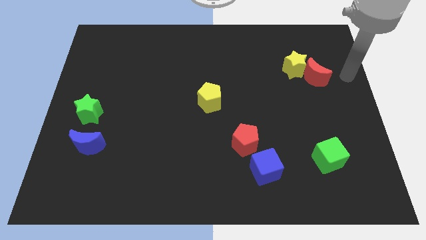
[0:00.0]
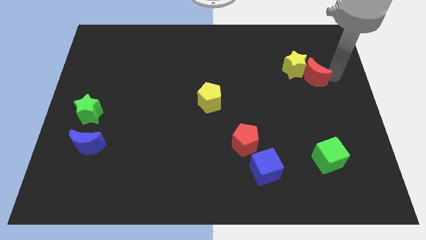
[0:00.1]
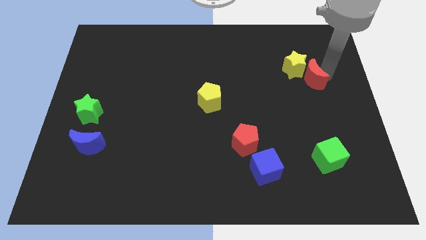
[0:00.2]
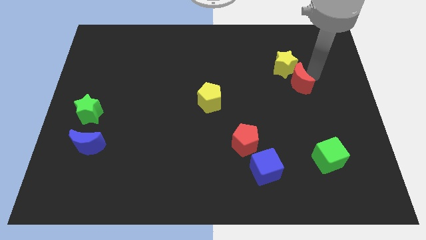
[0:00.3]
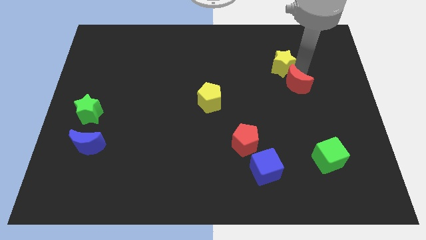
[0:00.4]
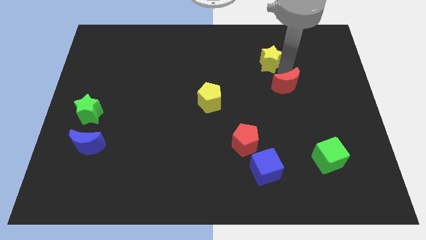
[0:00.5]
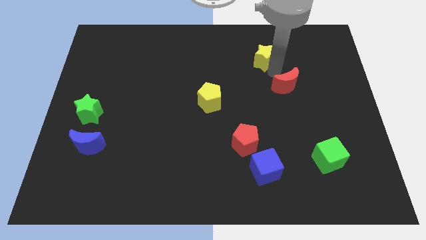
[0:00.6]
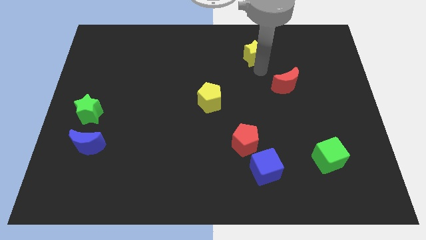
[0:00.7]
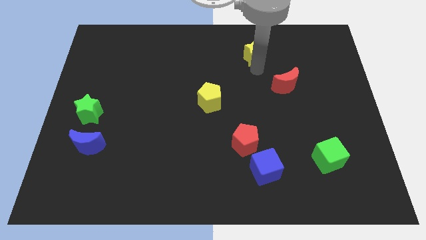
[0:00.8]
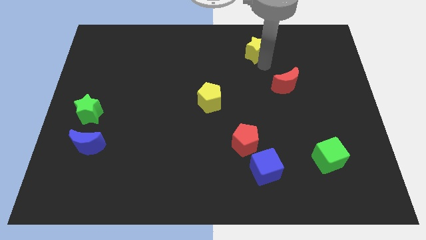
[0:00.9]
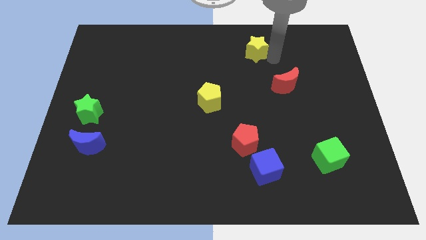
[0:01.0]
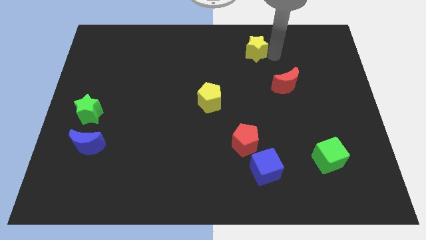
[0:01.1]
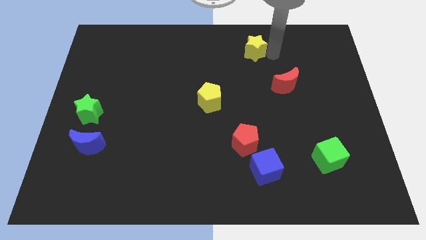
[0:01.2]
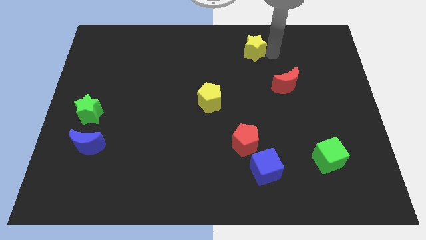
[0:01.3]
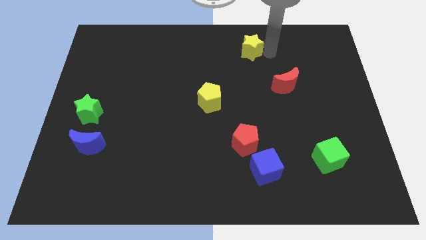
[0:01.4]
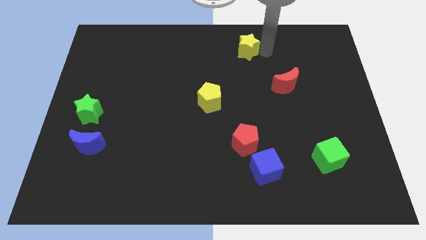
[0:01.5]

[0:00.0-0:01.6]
separate the yellow star from the red moon

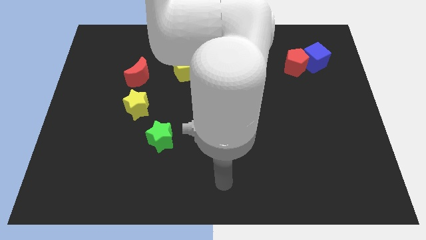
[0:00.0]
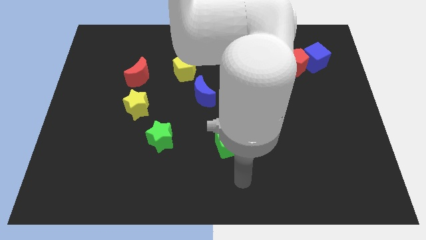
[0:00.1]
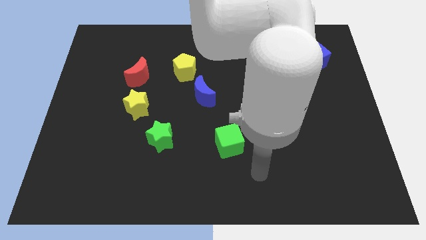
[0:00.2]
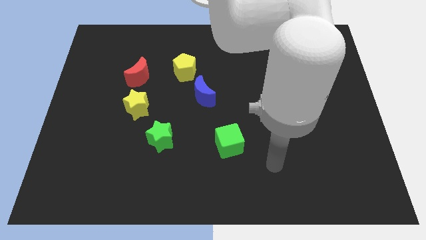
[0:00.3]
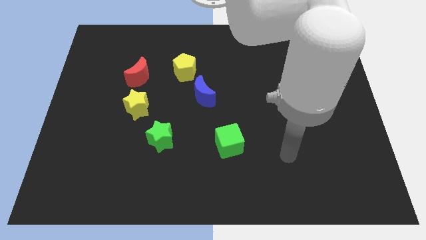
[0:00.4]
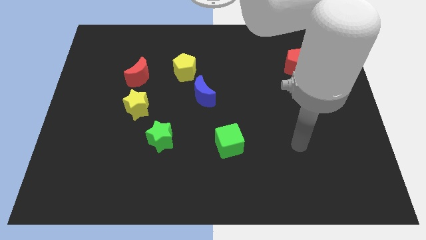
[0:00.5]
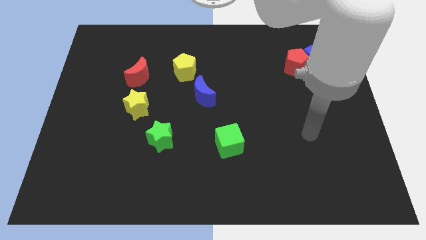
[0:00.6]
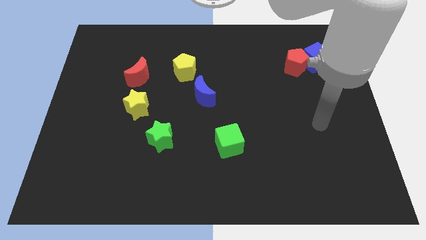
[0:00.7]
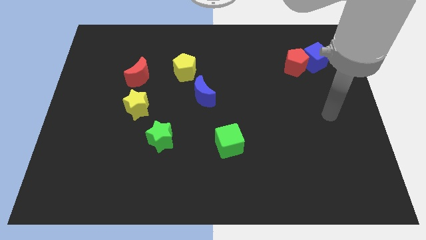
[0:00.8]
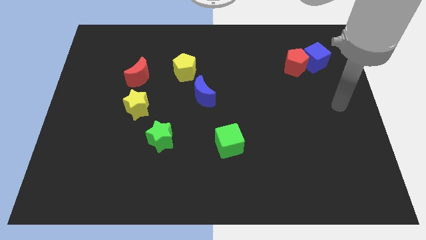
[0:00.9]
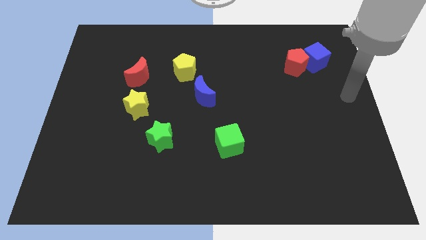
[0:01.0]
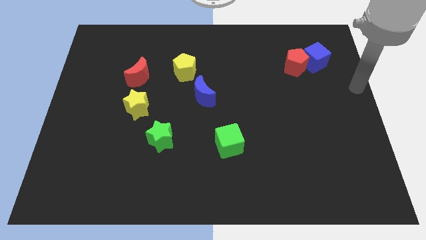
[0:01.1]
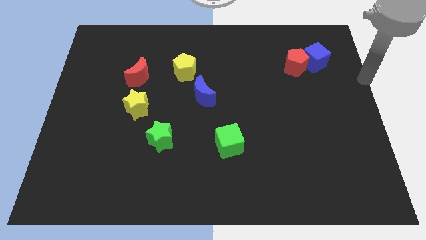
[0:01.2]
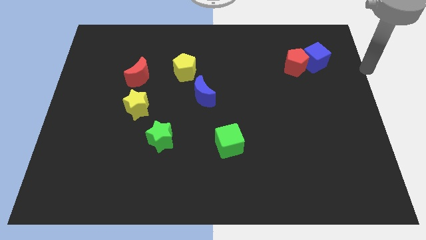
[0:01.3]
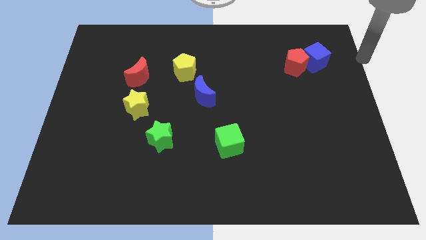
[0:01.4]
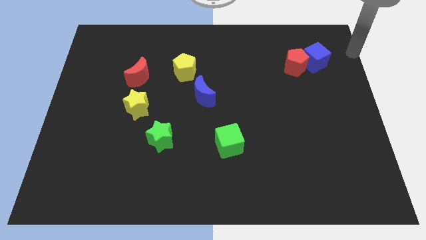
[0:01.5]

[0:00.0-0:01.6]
move the arm away from the green cube

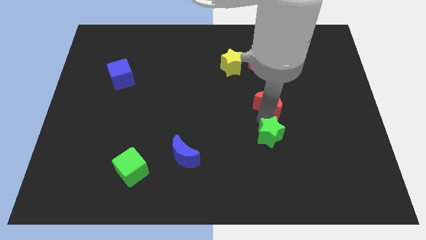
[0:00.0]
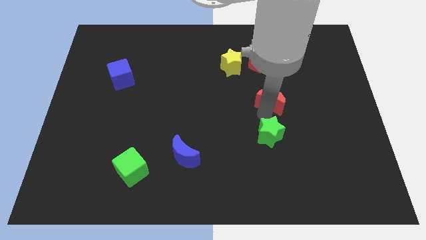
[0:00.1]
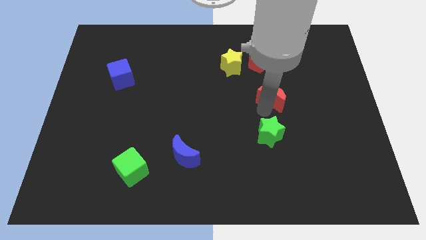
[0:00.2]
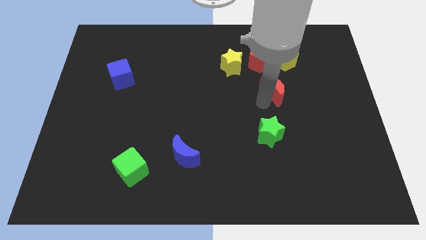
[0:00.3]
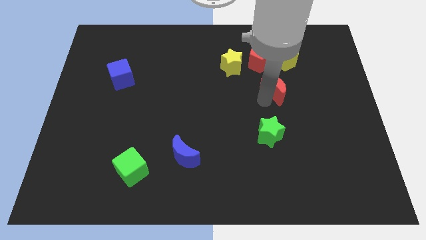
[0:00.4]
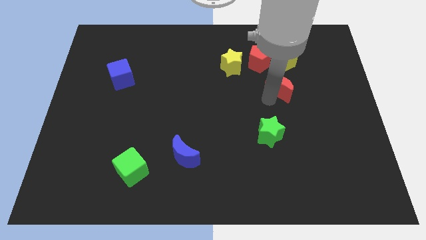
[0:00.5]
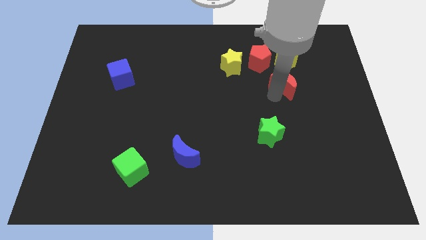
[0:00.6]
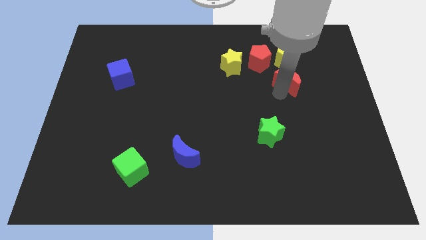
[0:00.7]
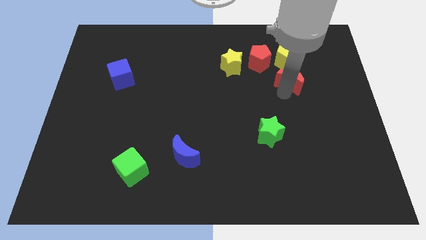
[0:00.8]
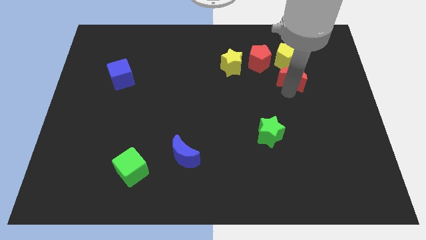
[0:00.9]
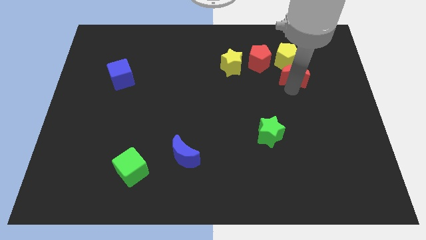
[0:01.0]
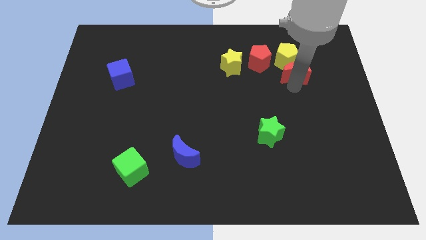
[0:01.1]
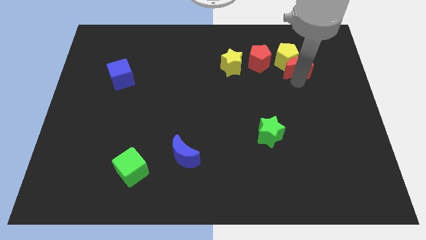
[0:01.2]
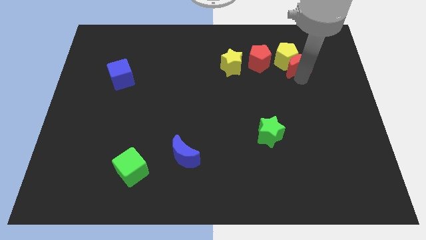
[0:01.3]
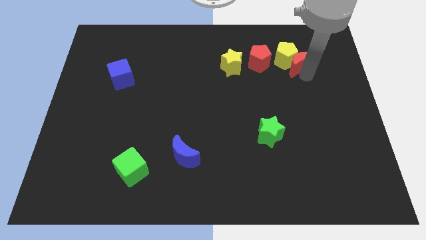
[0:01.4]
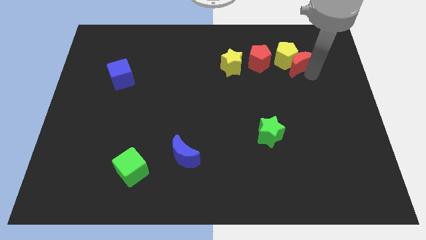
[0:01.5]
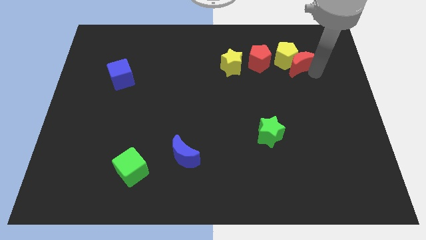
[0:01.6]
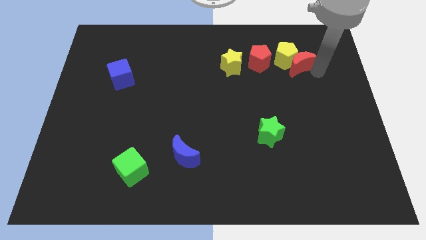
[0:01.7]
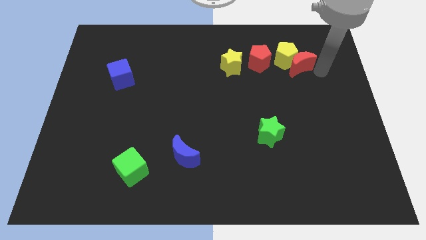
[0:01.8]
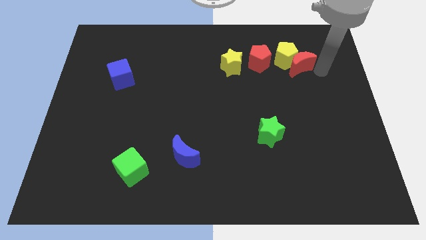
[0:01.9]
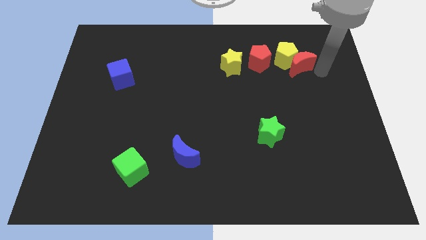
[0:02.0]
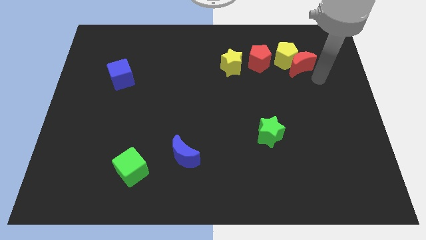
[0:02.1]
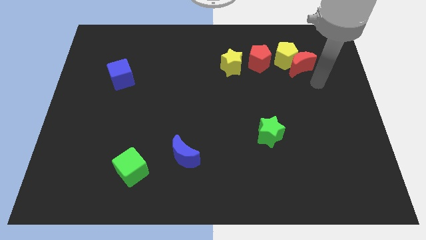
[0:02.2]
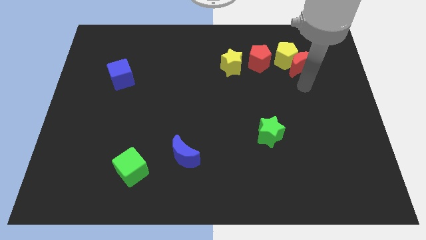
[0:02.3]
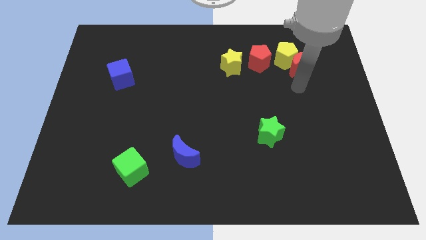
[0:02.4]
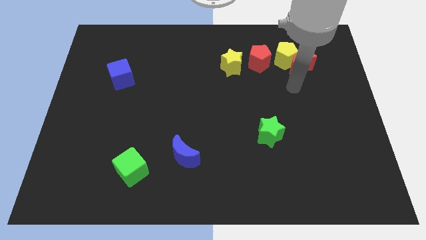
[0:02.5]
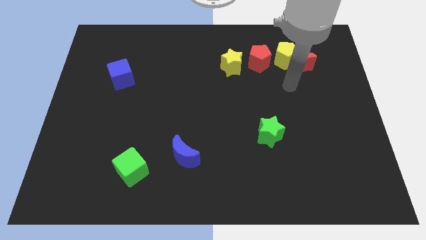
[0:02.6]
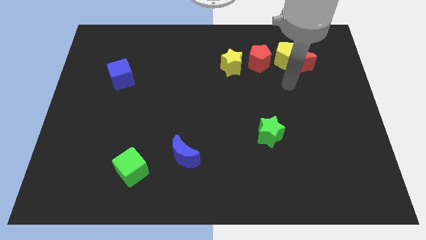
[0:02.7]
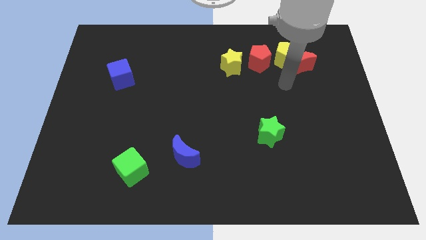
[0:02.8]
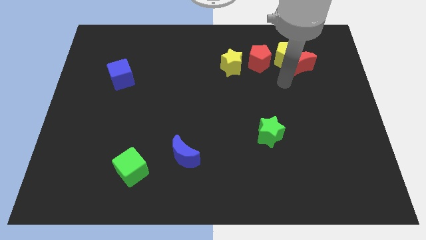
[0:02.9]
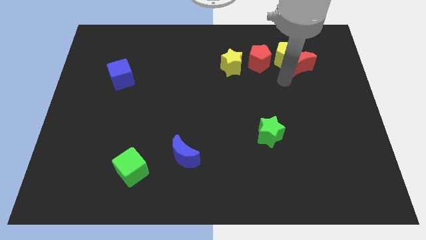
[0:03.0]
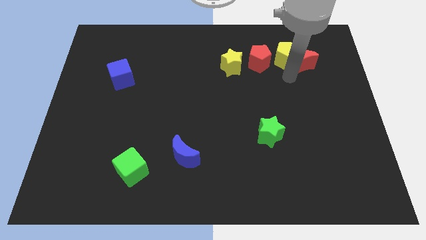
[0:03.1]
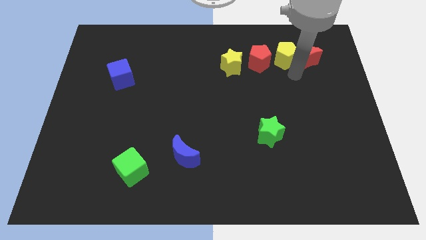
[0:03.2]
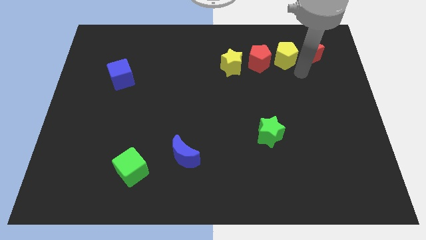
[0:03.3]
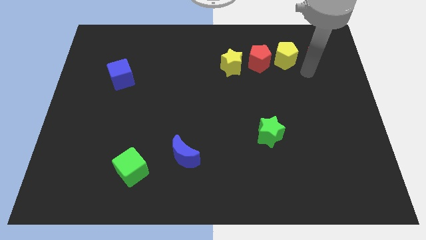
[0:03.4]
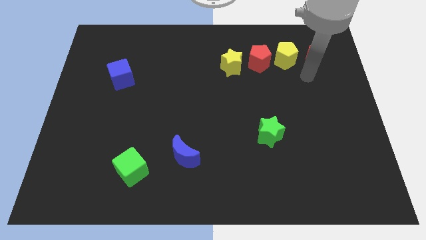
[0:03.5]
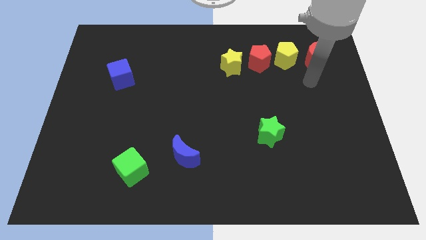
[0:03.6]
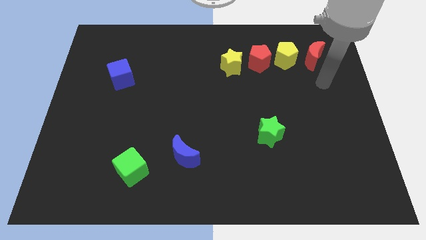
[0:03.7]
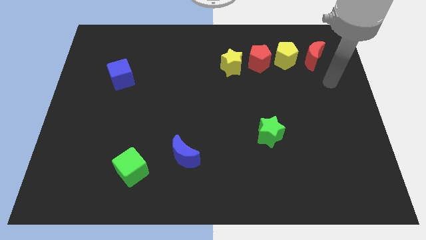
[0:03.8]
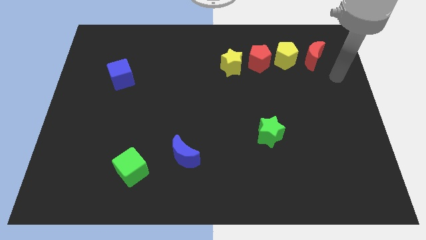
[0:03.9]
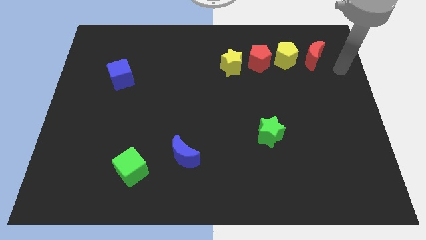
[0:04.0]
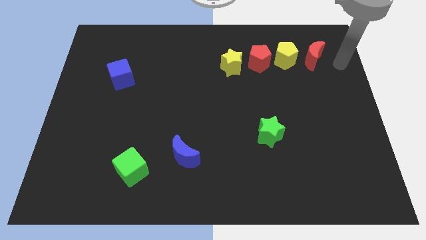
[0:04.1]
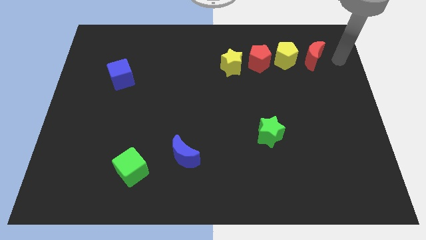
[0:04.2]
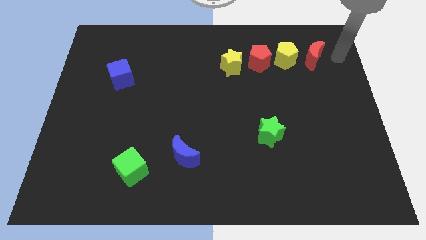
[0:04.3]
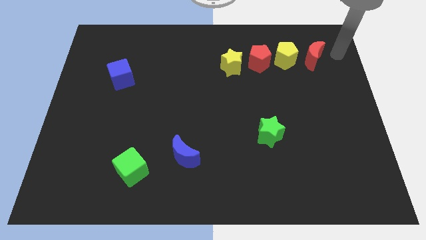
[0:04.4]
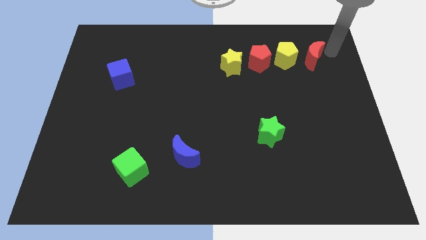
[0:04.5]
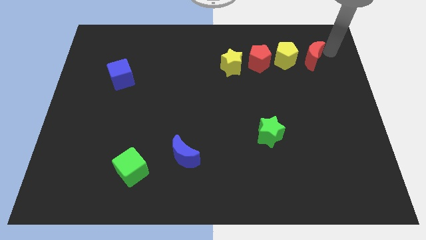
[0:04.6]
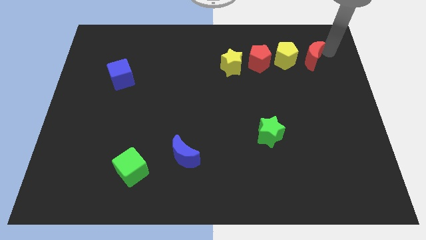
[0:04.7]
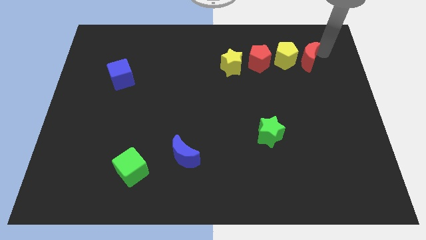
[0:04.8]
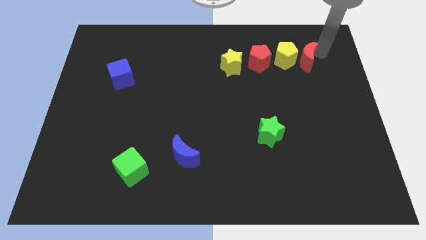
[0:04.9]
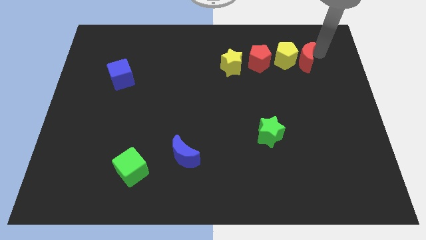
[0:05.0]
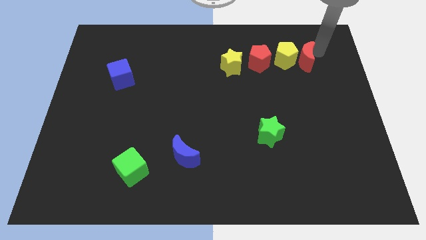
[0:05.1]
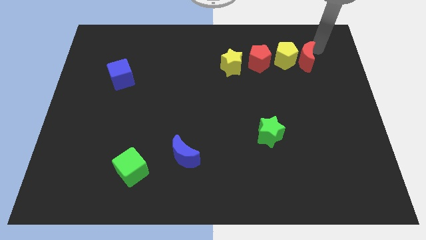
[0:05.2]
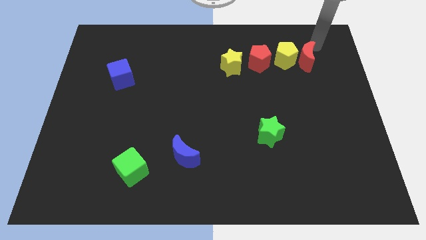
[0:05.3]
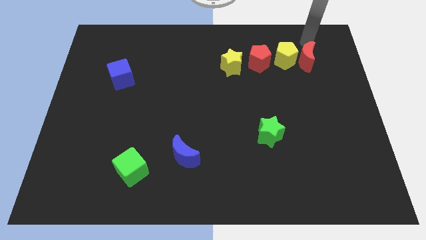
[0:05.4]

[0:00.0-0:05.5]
place the red crescent to the right yellow pentagon

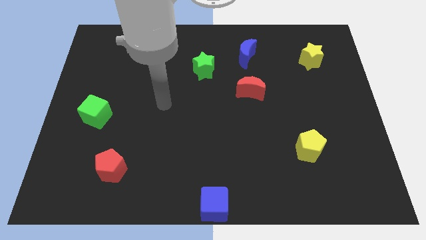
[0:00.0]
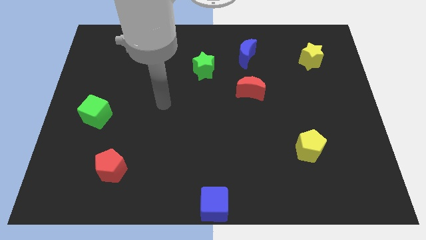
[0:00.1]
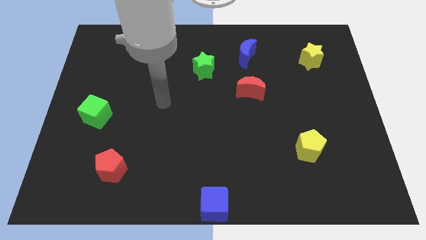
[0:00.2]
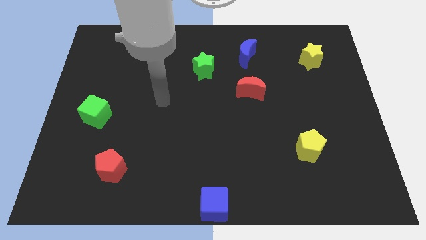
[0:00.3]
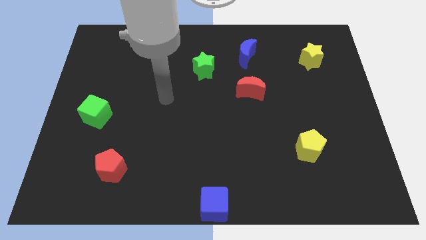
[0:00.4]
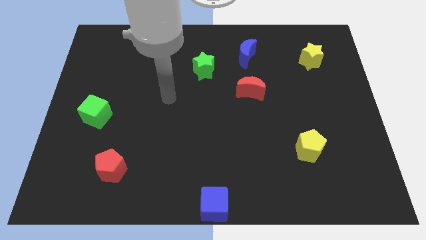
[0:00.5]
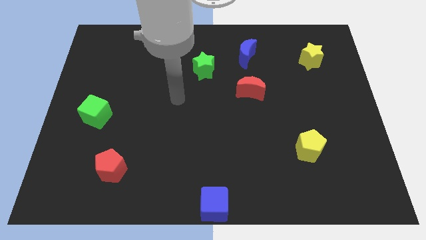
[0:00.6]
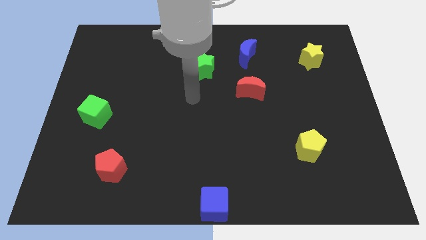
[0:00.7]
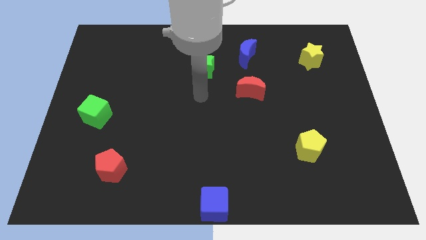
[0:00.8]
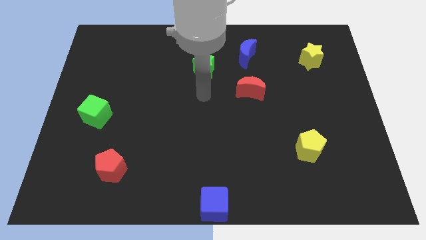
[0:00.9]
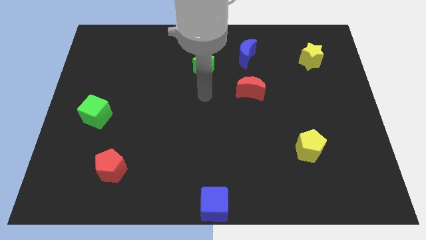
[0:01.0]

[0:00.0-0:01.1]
place your arm at the bottom side of the green star
